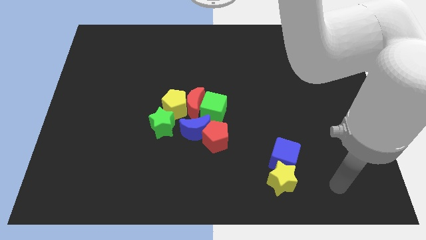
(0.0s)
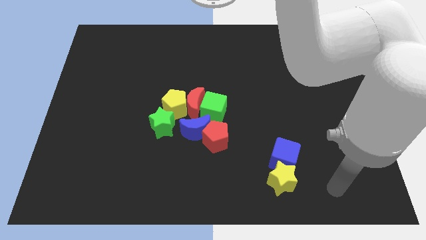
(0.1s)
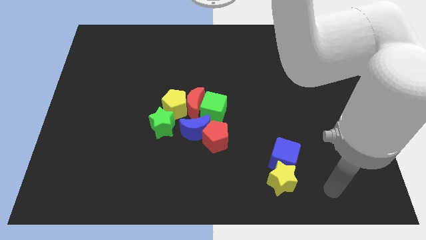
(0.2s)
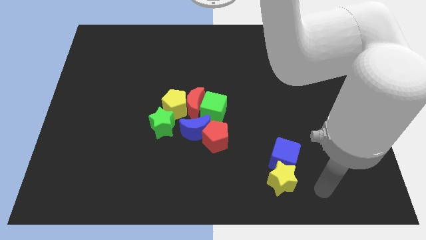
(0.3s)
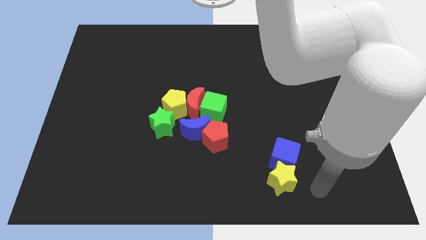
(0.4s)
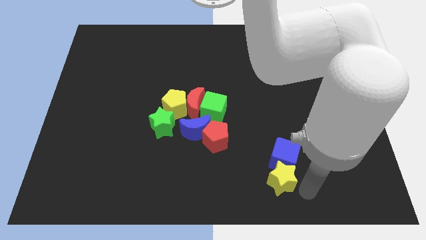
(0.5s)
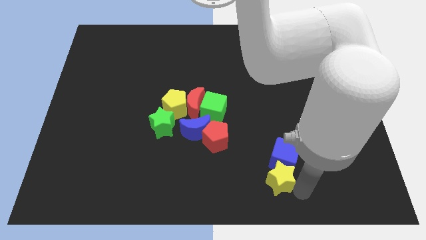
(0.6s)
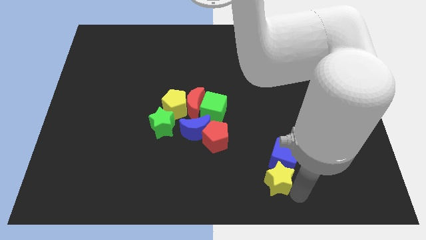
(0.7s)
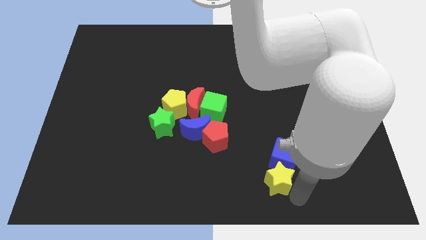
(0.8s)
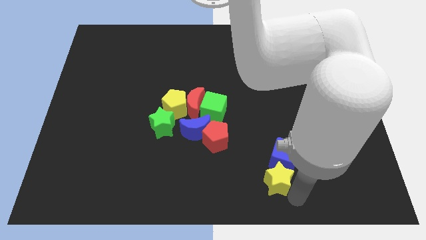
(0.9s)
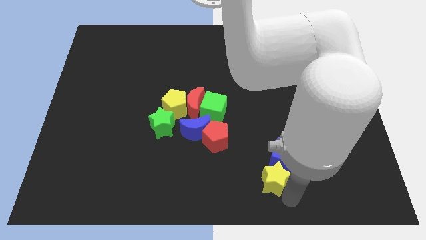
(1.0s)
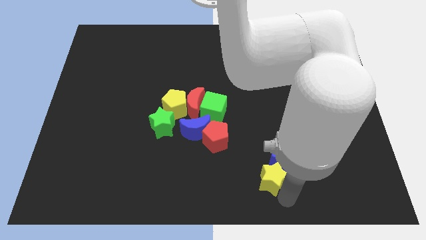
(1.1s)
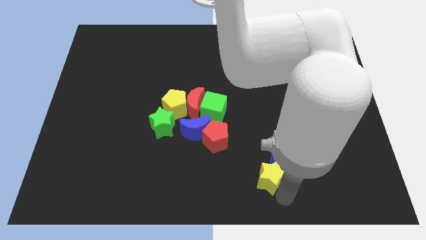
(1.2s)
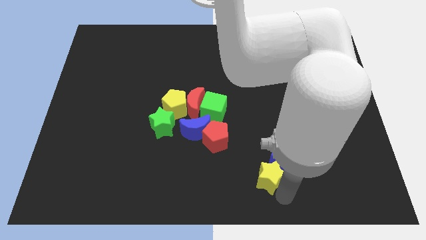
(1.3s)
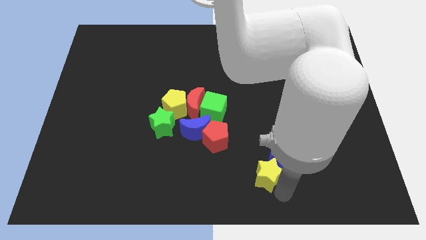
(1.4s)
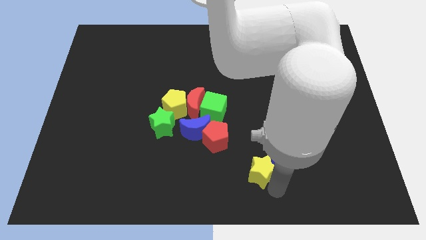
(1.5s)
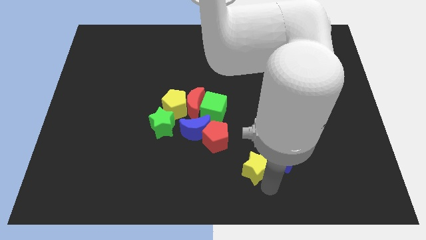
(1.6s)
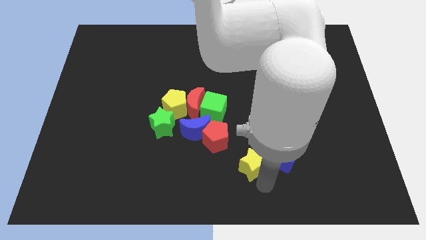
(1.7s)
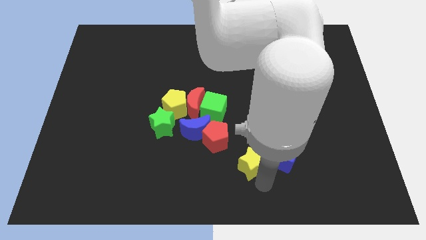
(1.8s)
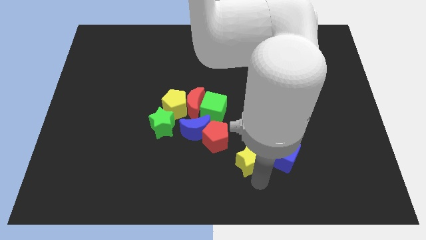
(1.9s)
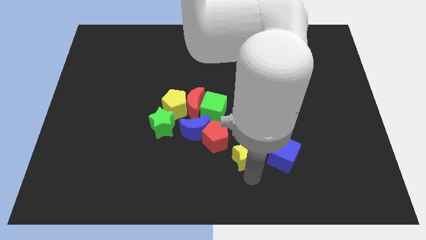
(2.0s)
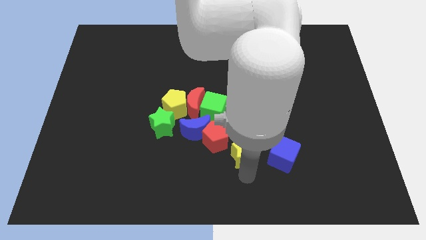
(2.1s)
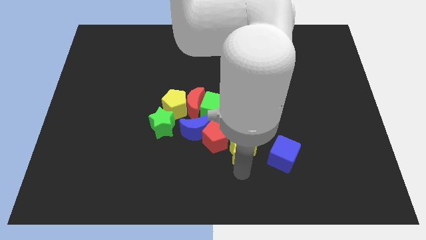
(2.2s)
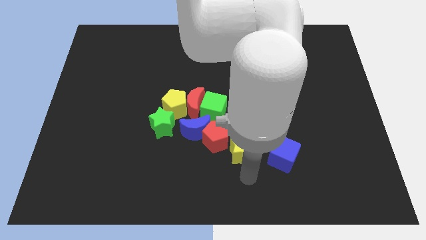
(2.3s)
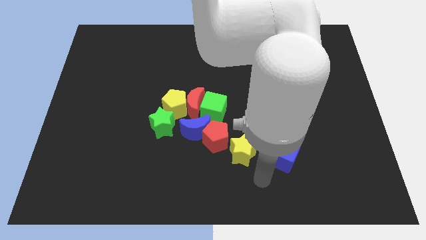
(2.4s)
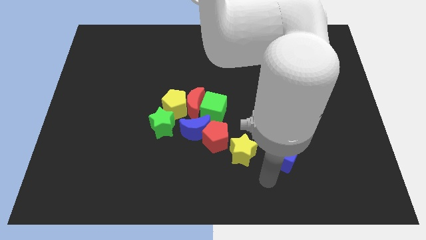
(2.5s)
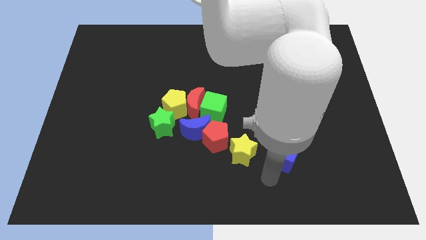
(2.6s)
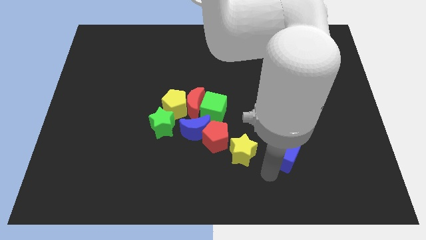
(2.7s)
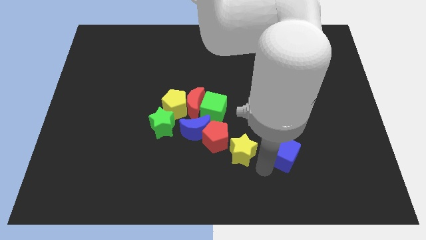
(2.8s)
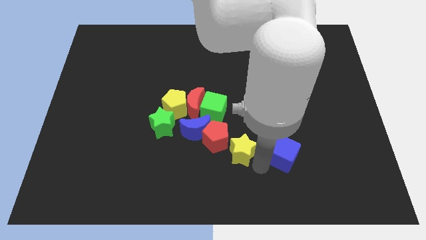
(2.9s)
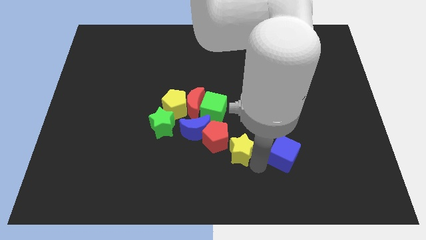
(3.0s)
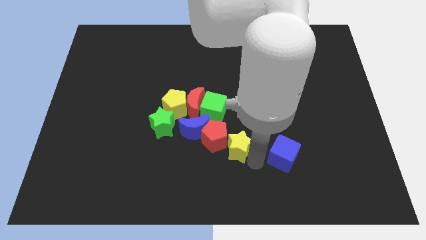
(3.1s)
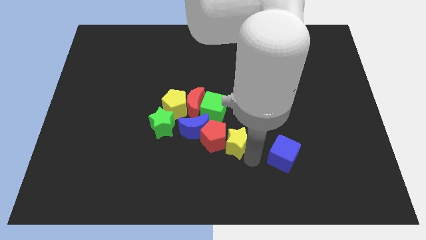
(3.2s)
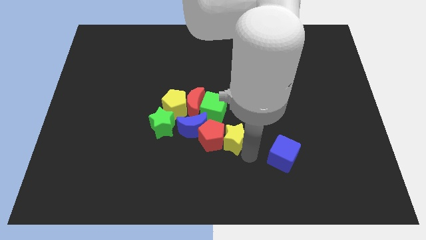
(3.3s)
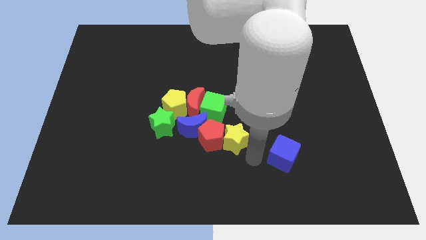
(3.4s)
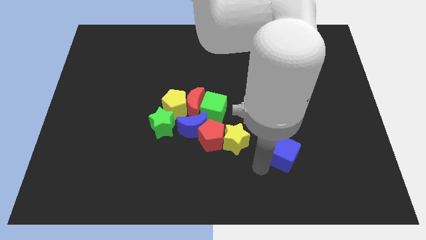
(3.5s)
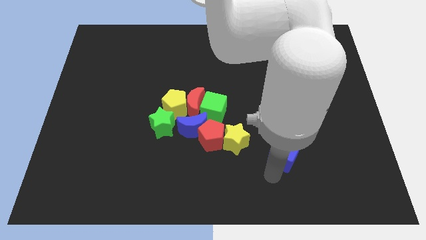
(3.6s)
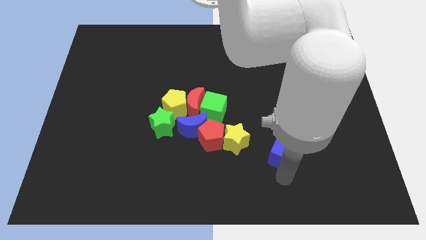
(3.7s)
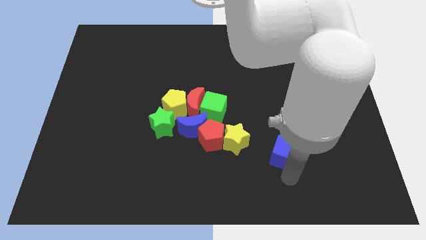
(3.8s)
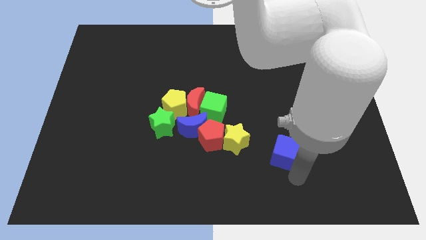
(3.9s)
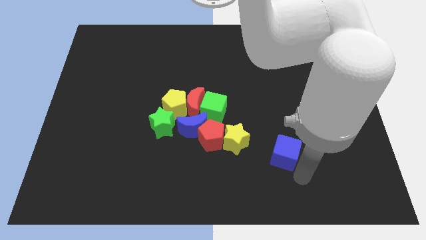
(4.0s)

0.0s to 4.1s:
push yellow star to right of red pentagon

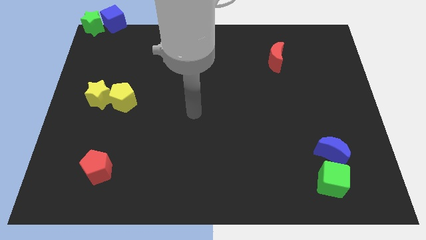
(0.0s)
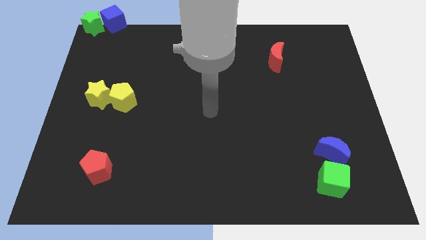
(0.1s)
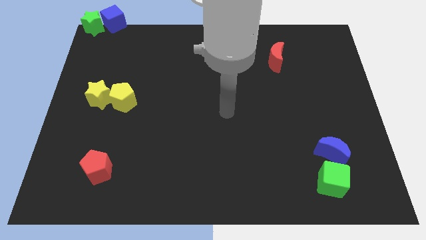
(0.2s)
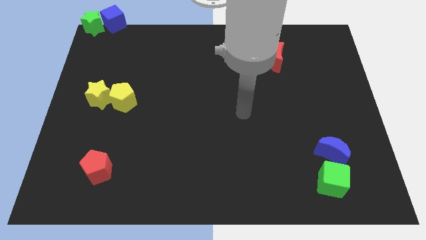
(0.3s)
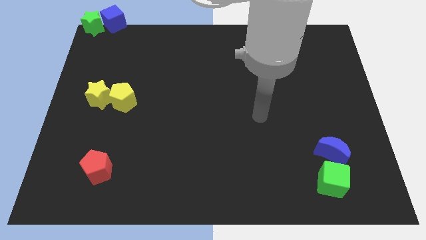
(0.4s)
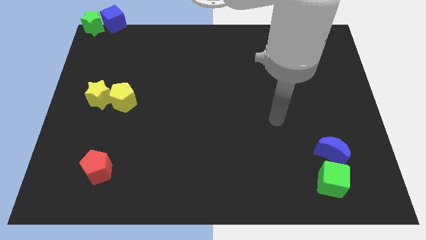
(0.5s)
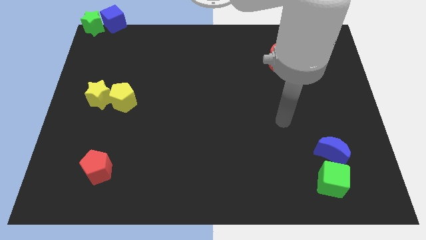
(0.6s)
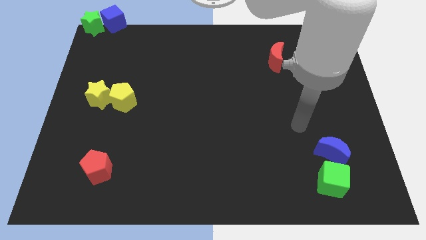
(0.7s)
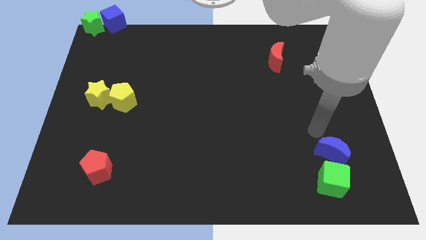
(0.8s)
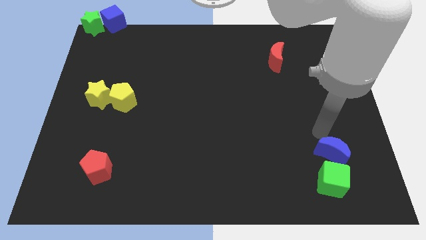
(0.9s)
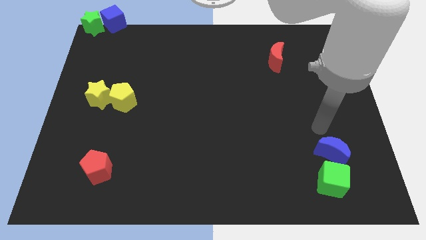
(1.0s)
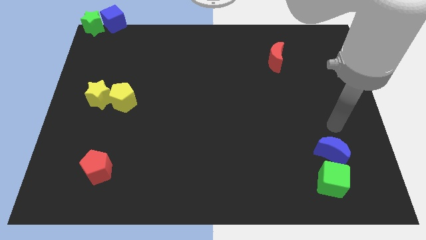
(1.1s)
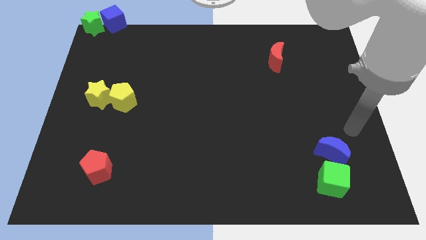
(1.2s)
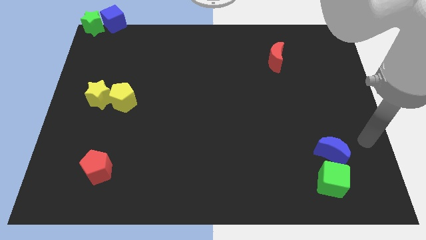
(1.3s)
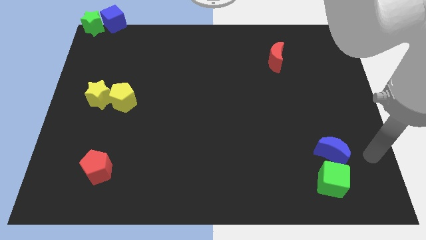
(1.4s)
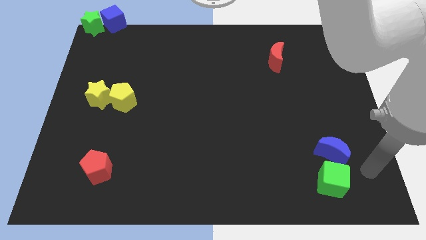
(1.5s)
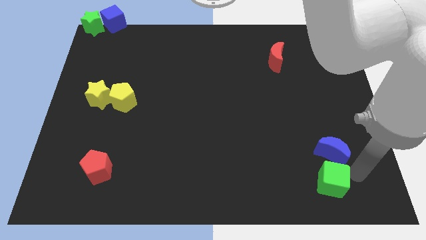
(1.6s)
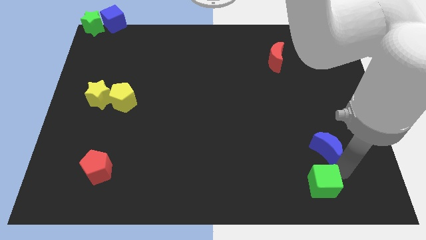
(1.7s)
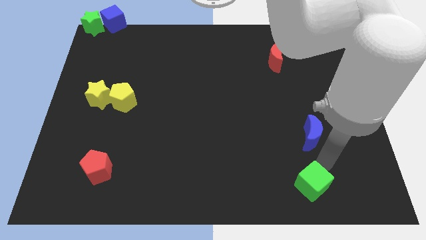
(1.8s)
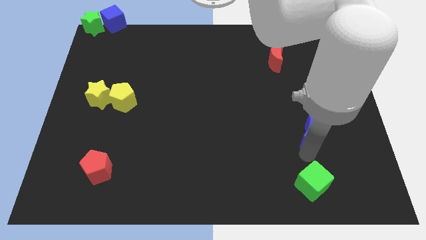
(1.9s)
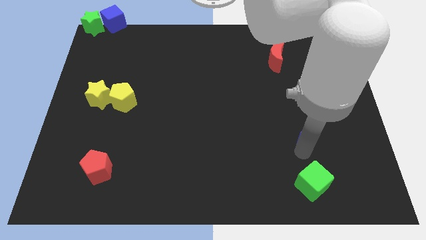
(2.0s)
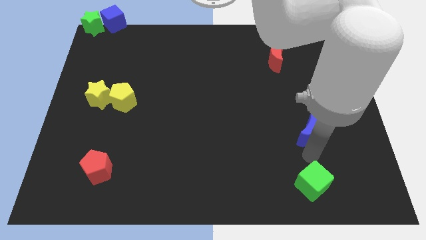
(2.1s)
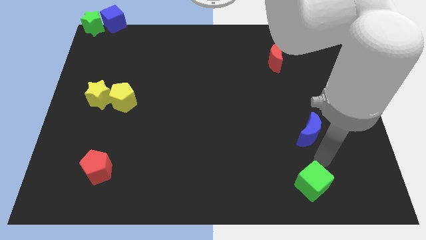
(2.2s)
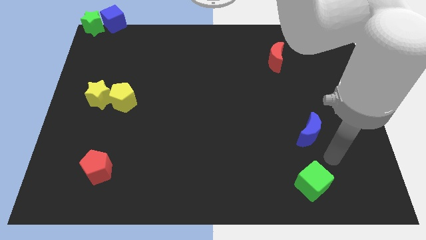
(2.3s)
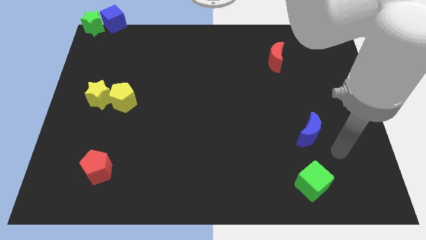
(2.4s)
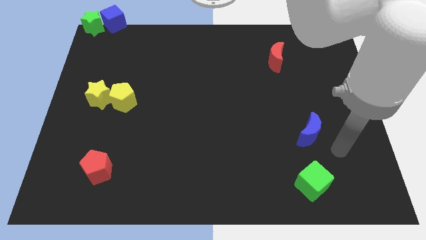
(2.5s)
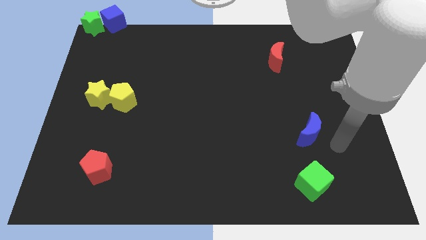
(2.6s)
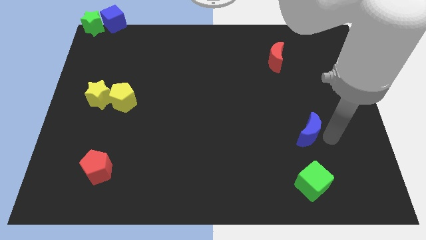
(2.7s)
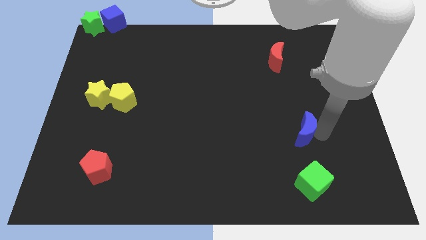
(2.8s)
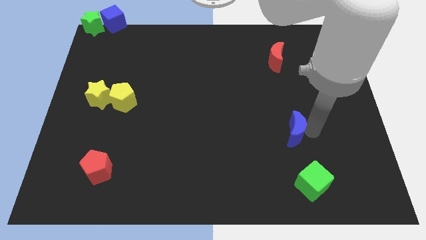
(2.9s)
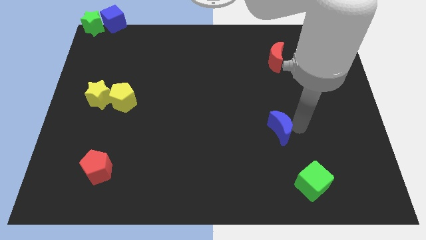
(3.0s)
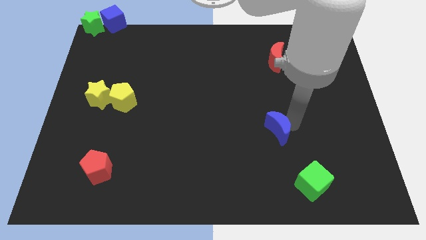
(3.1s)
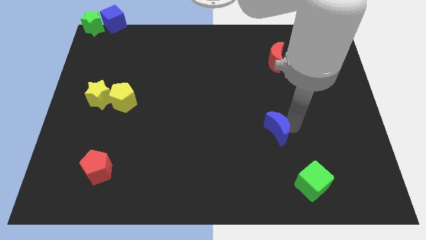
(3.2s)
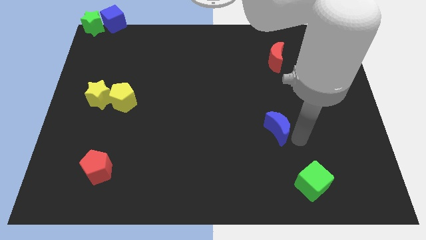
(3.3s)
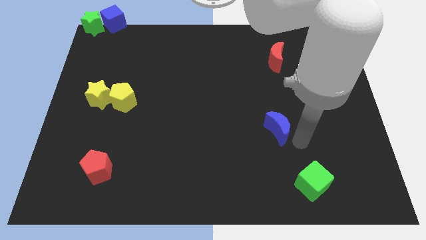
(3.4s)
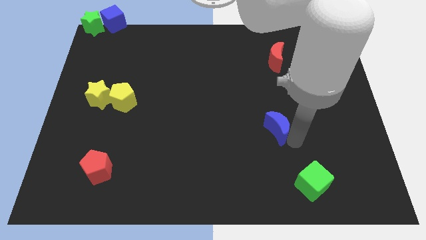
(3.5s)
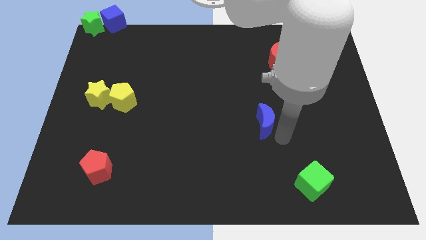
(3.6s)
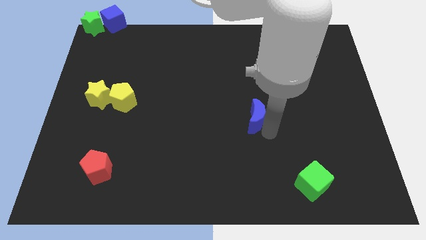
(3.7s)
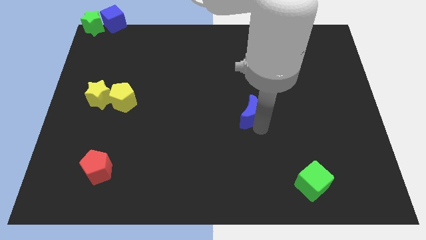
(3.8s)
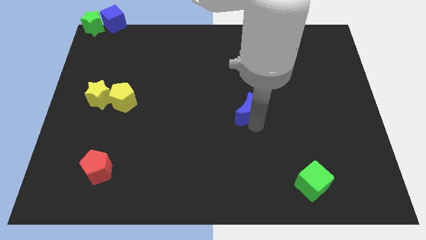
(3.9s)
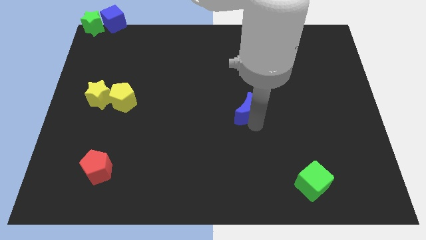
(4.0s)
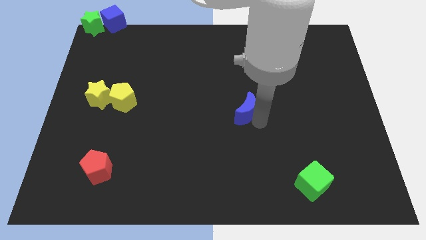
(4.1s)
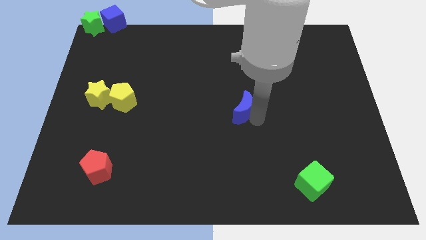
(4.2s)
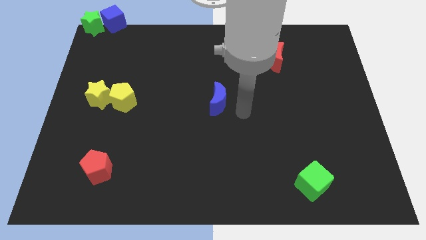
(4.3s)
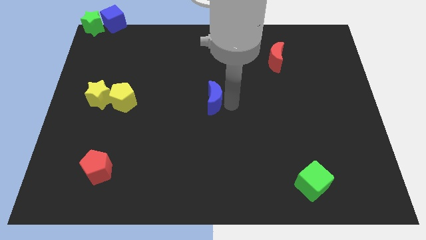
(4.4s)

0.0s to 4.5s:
separate the blue crescent from the green cube

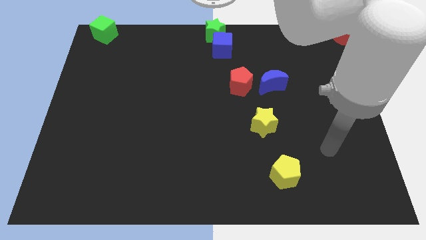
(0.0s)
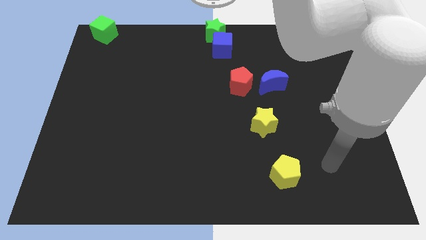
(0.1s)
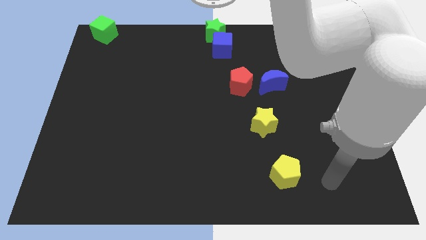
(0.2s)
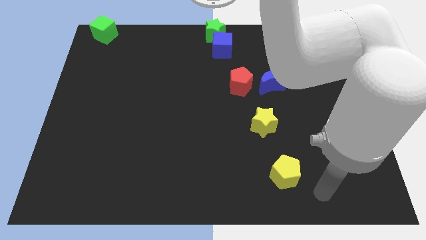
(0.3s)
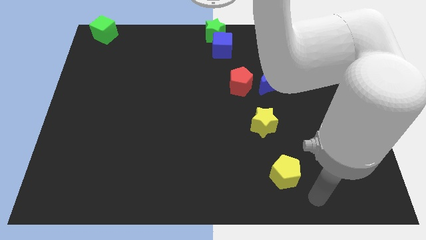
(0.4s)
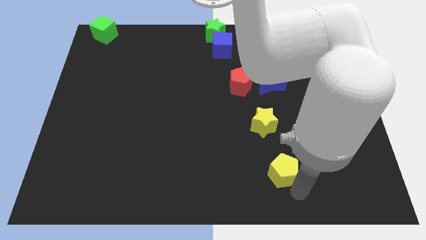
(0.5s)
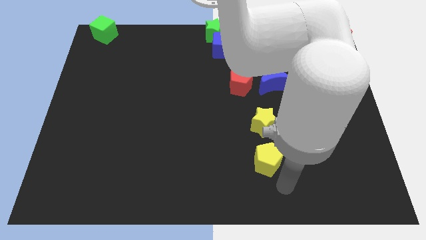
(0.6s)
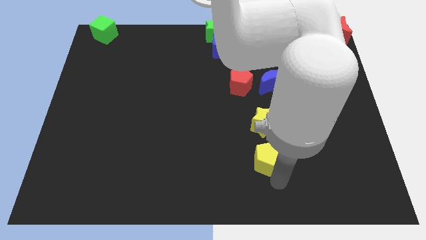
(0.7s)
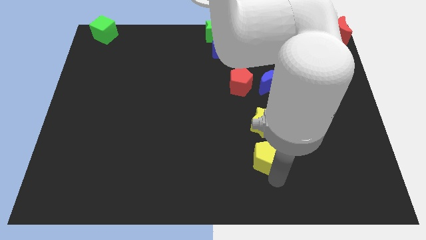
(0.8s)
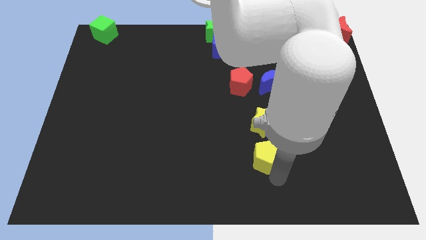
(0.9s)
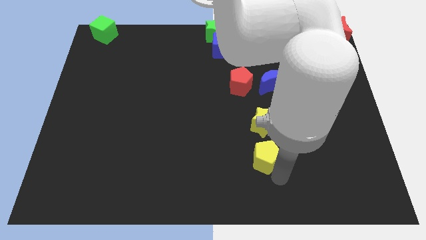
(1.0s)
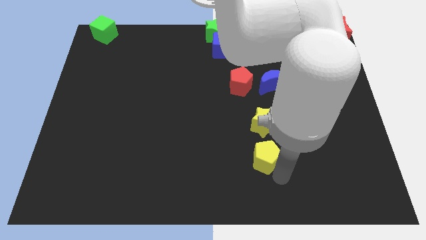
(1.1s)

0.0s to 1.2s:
place the yellow pentagon below the yellow star
